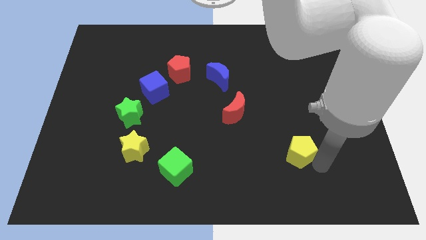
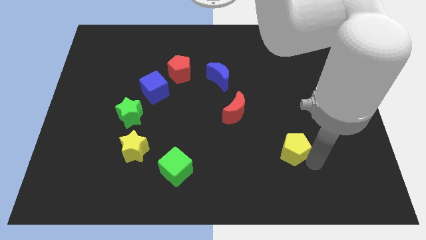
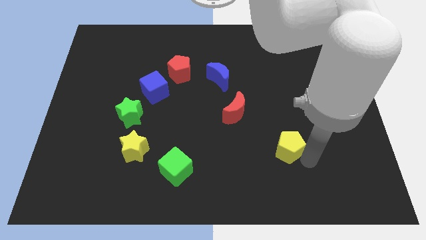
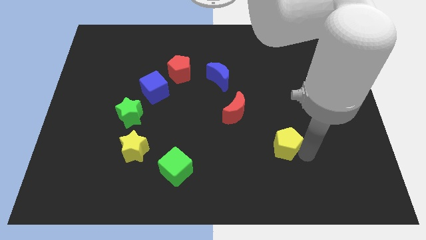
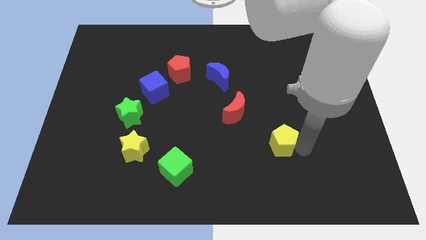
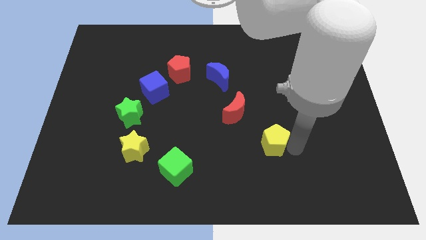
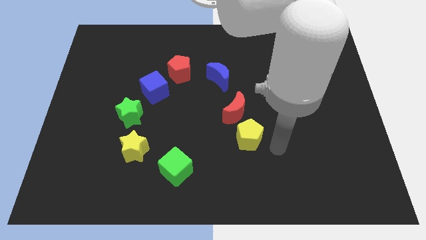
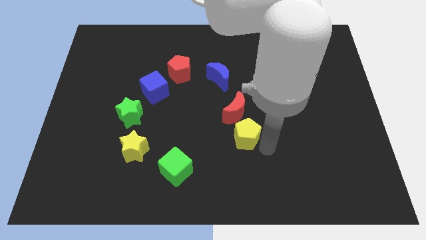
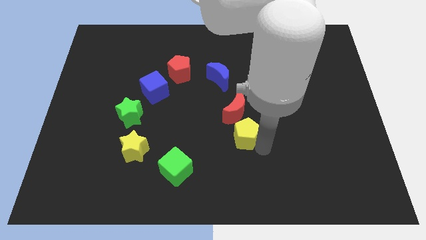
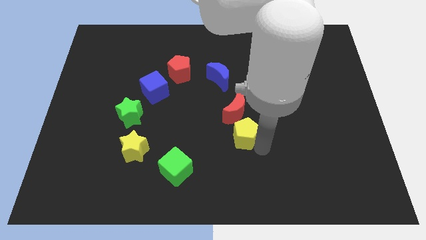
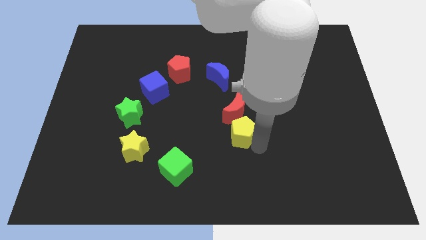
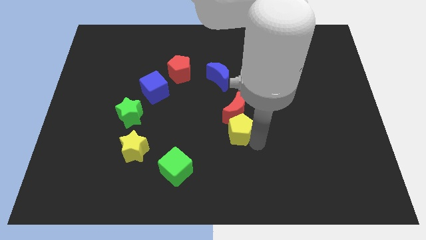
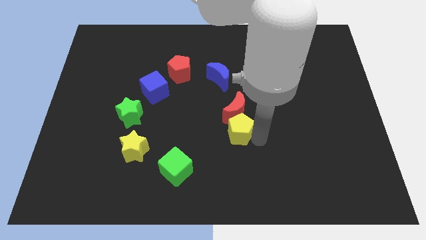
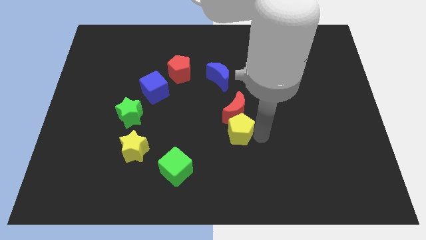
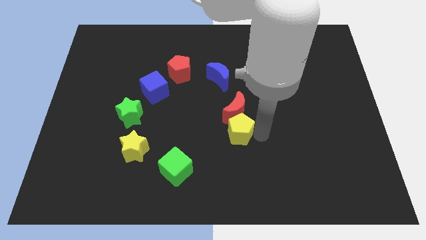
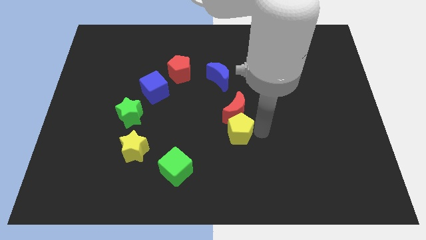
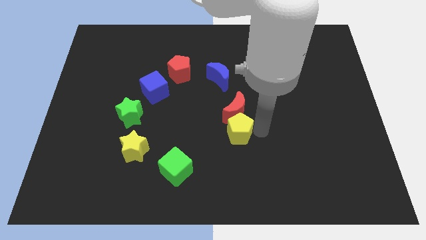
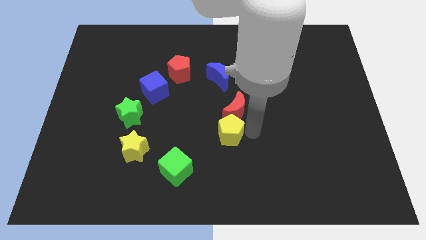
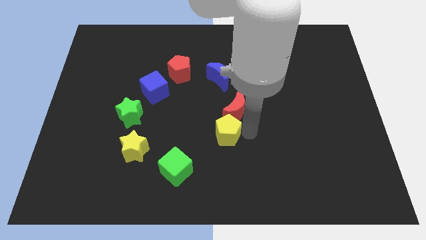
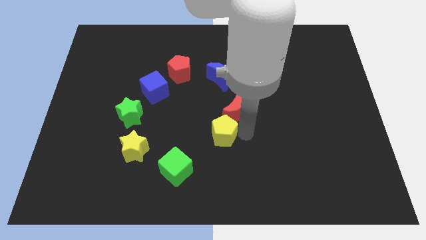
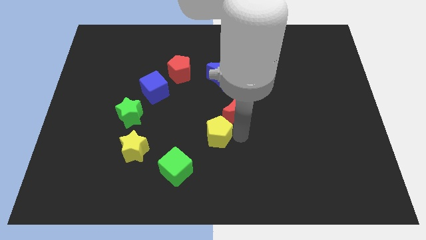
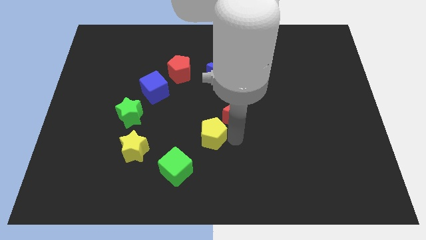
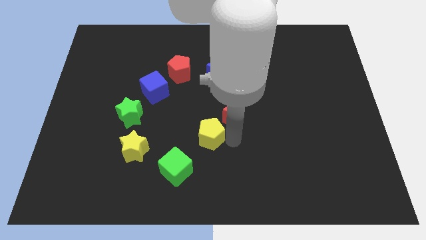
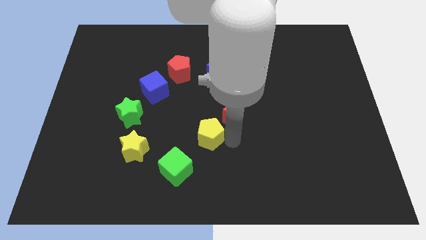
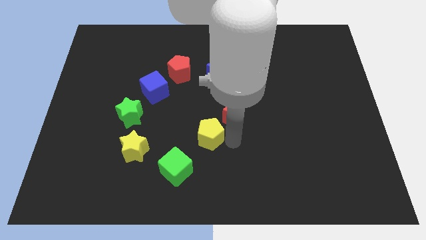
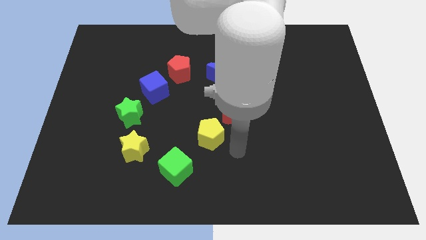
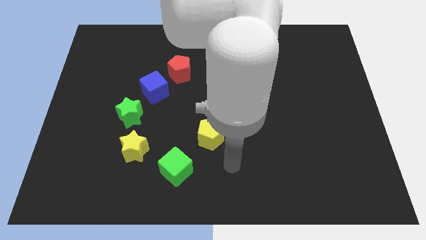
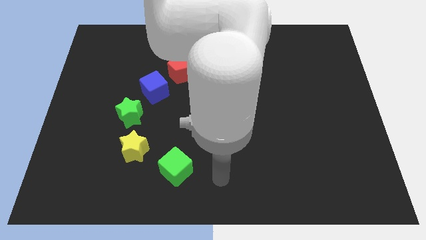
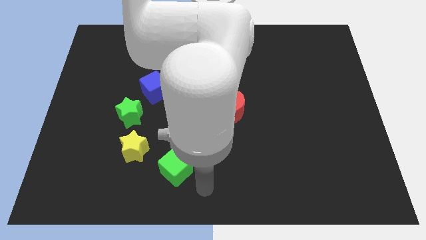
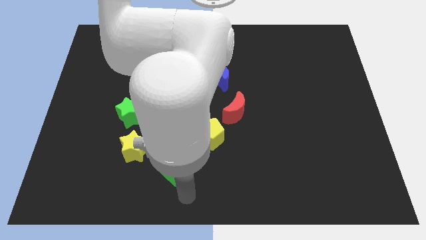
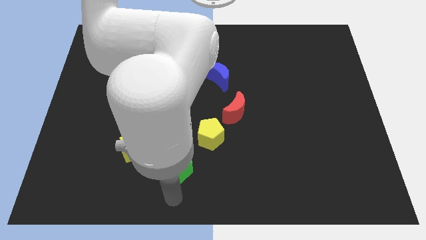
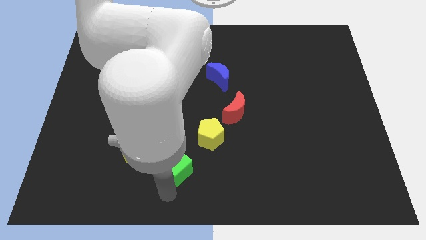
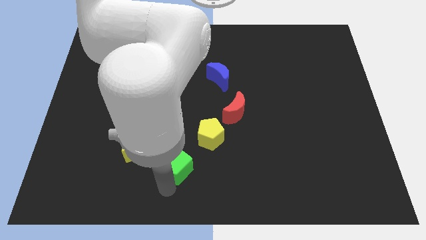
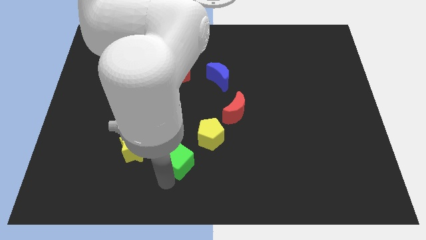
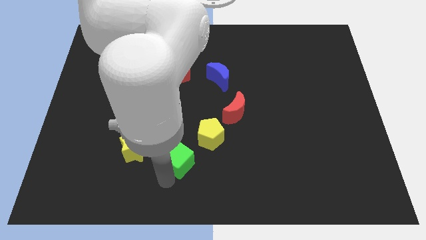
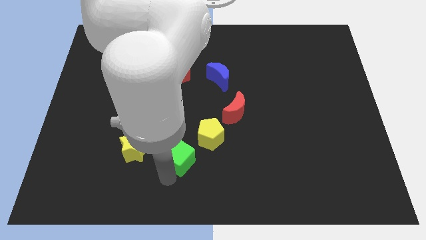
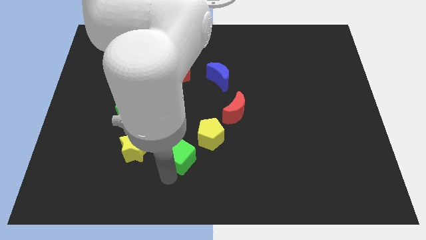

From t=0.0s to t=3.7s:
drag the yellow pentagon to form a circle

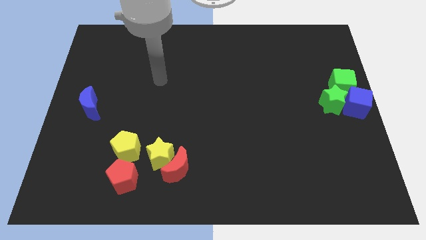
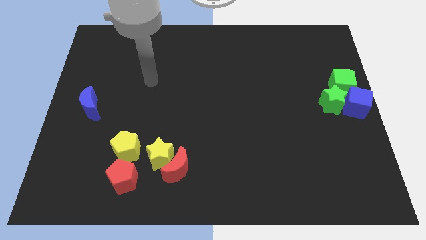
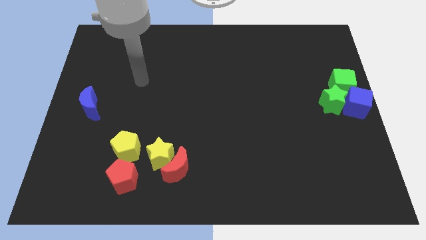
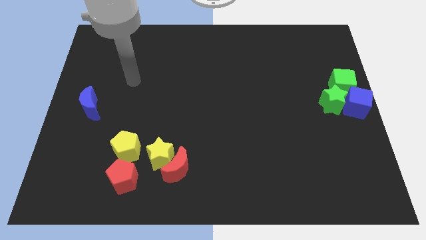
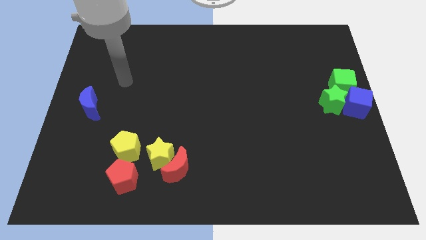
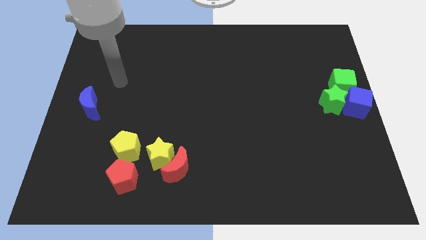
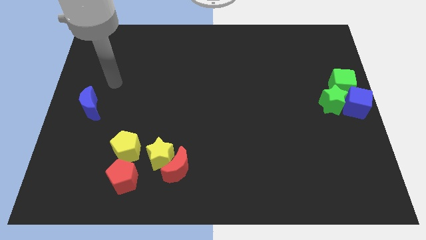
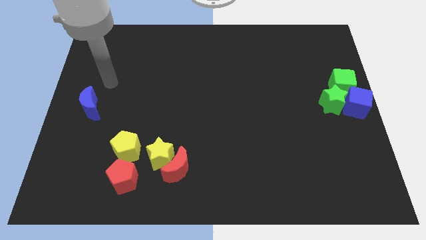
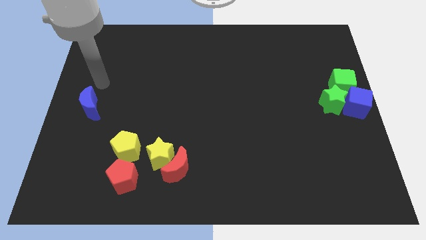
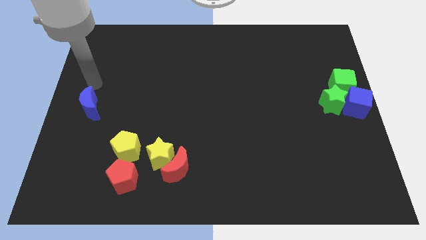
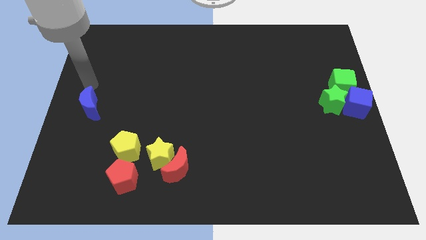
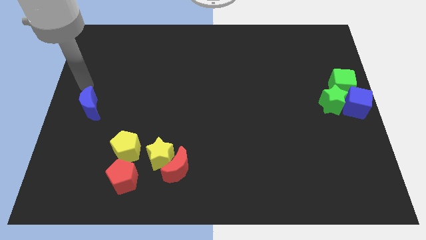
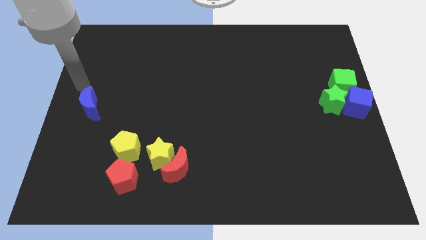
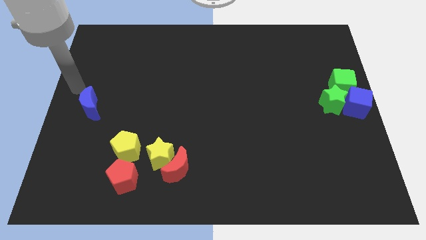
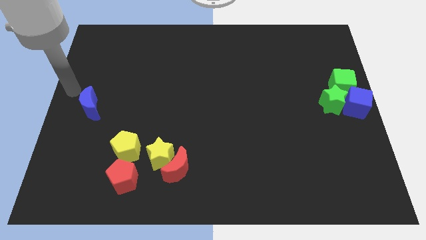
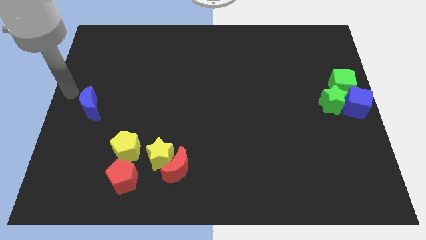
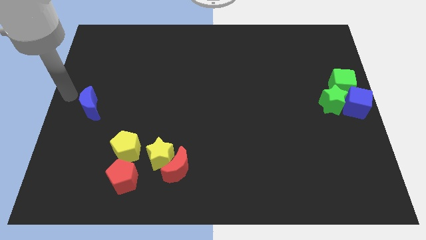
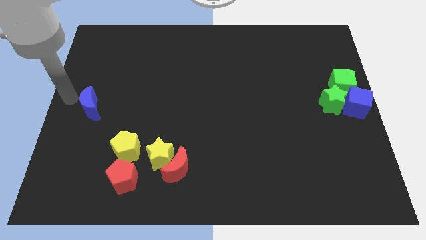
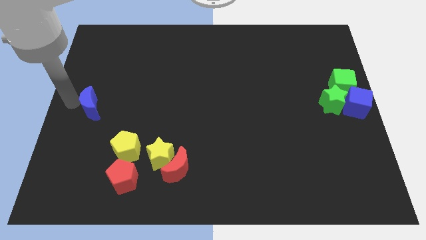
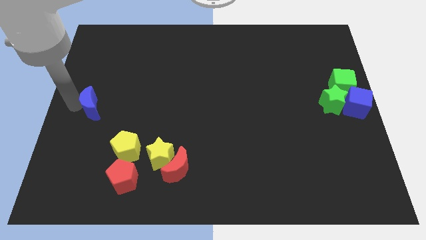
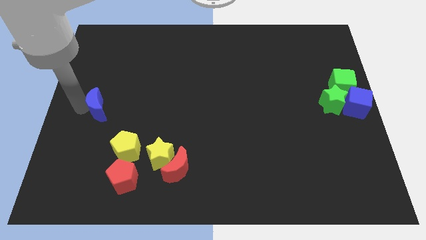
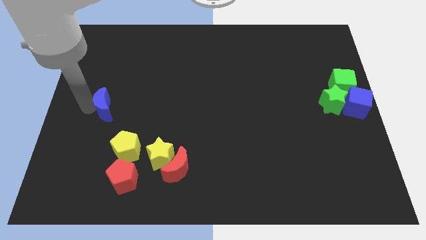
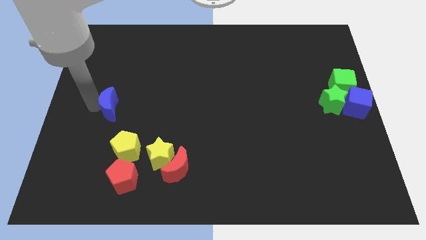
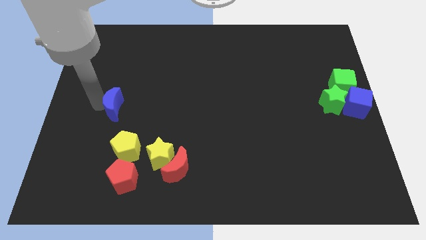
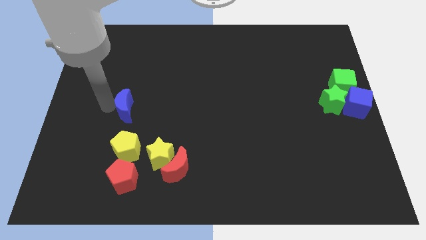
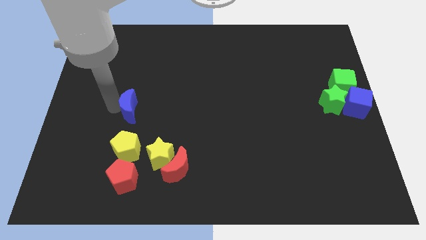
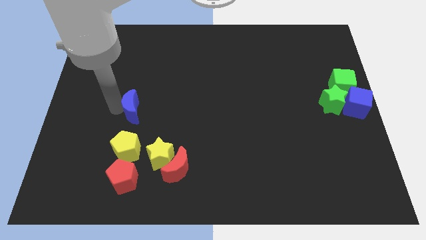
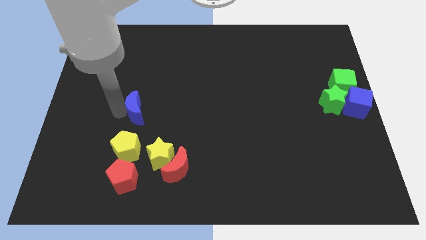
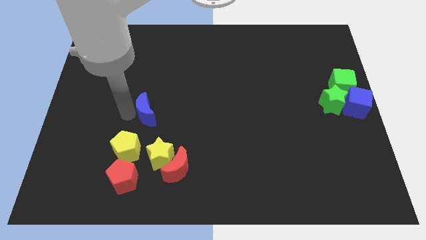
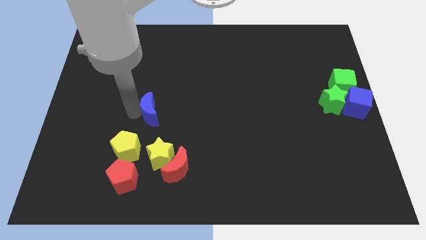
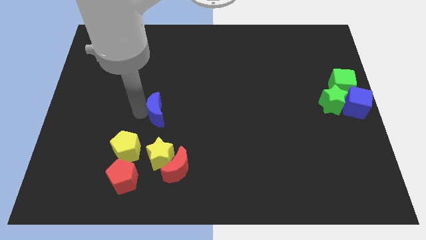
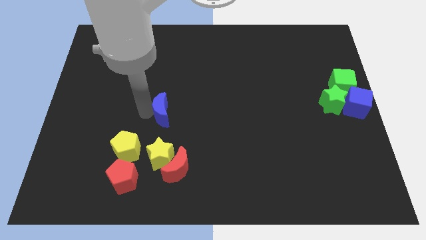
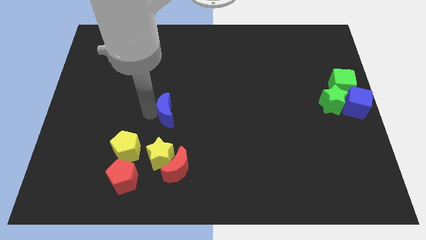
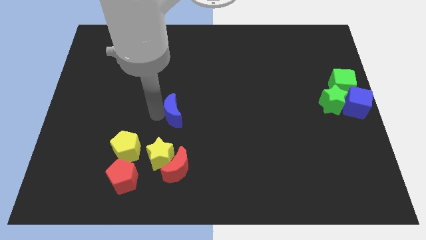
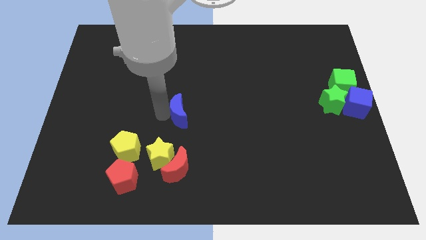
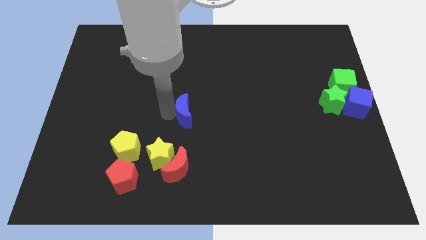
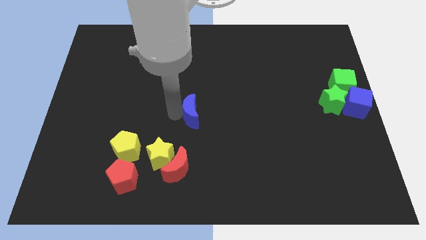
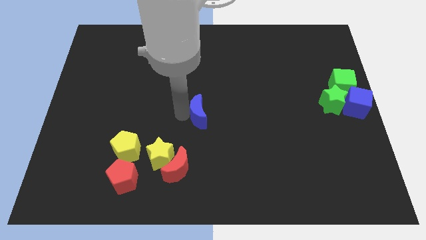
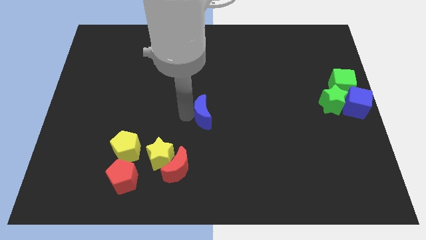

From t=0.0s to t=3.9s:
push the blue crescent to the center of the board

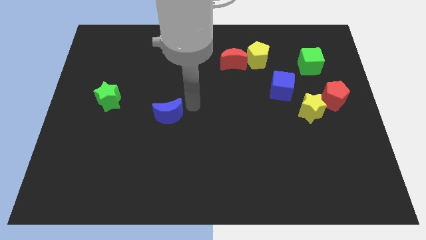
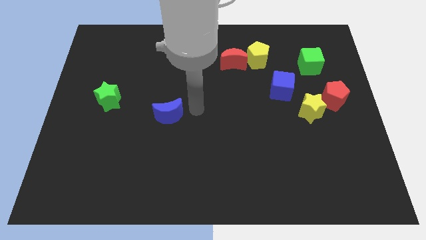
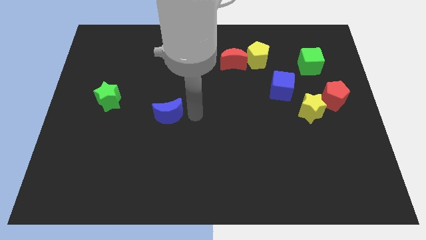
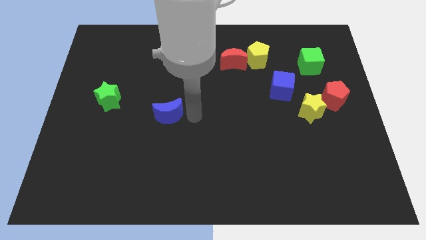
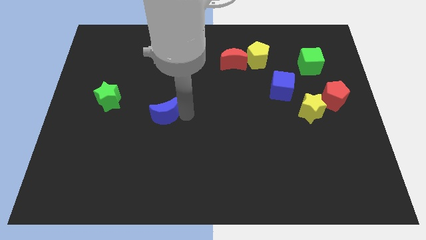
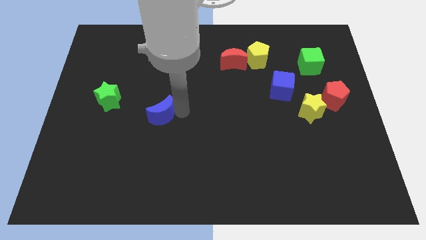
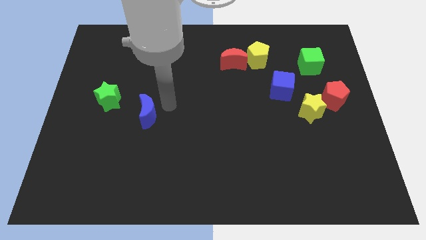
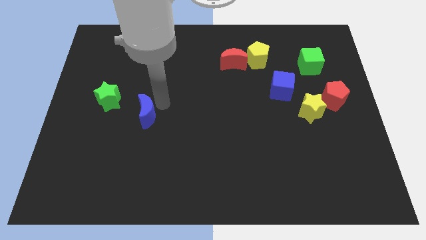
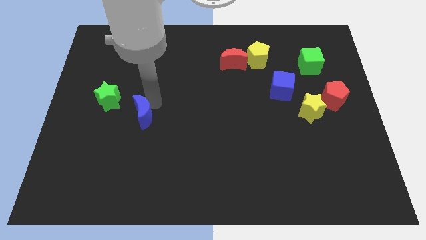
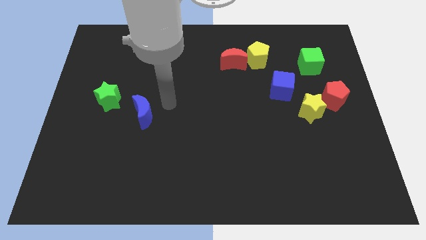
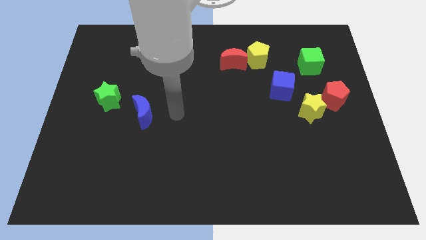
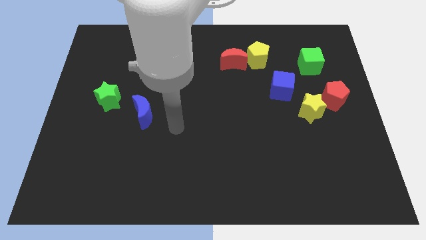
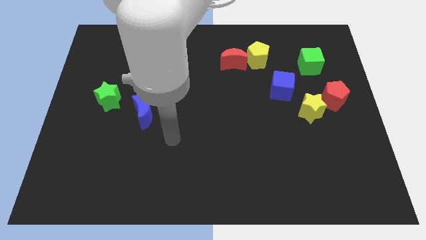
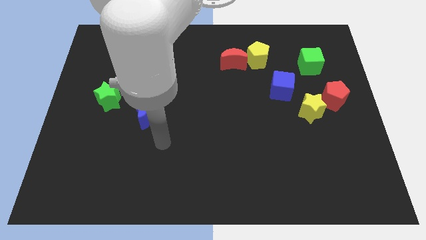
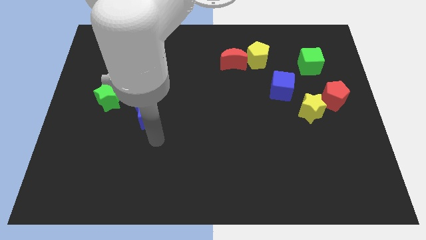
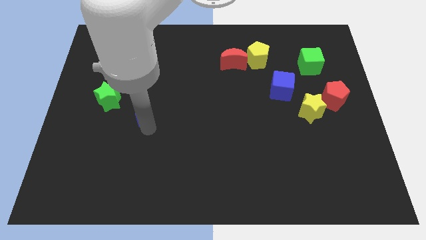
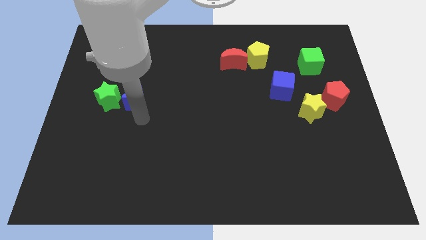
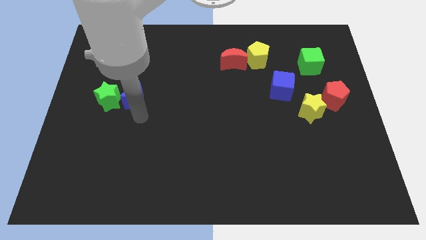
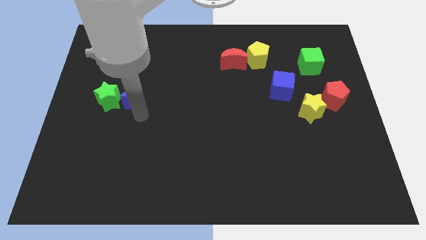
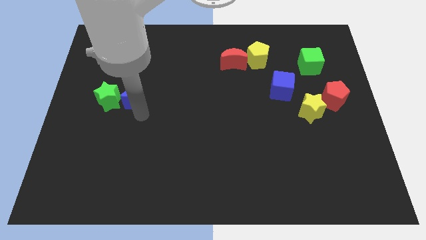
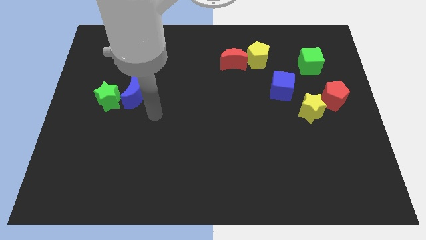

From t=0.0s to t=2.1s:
push blue crescent into green star
